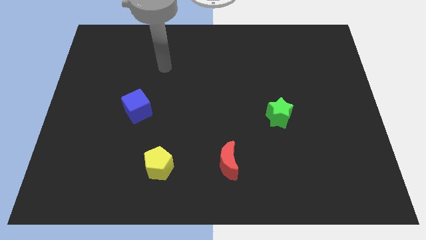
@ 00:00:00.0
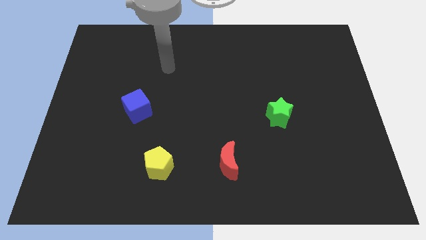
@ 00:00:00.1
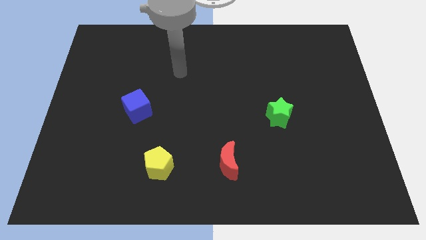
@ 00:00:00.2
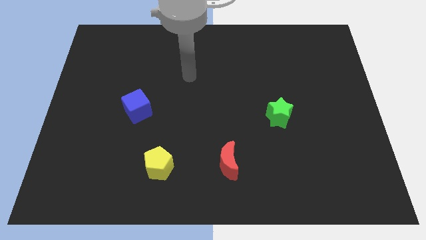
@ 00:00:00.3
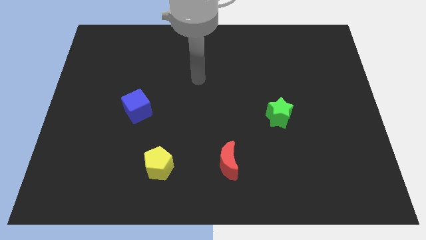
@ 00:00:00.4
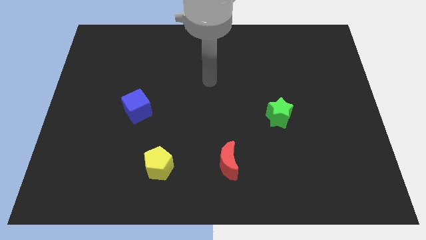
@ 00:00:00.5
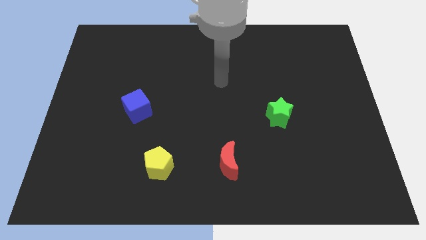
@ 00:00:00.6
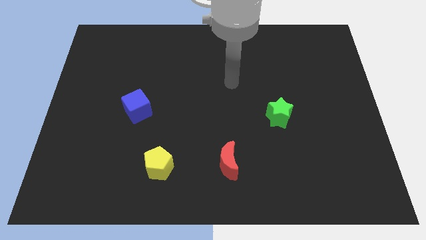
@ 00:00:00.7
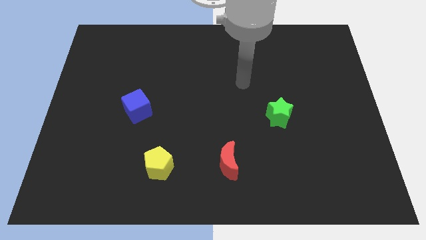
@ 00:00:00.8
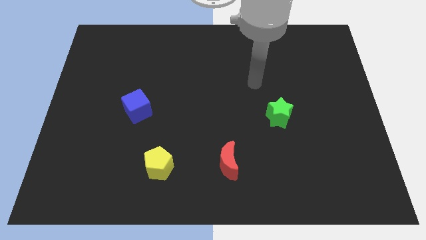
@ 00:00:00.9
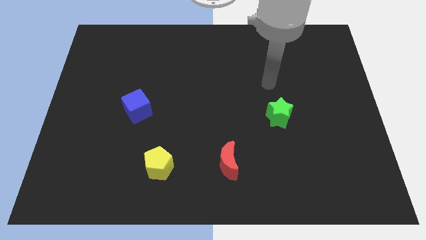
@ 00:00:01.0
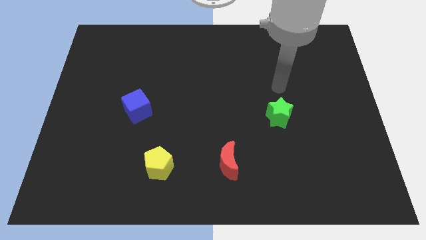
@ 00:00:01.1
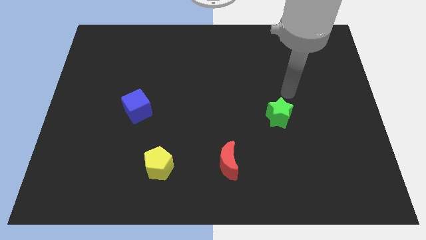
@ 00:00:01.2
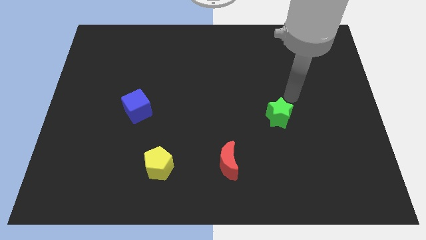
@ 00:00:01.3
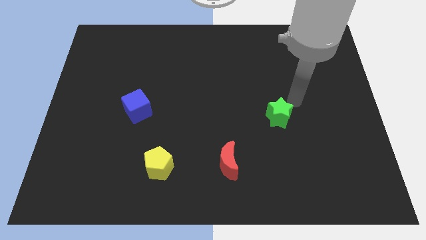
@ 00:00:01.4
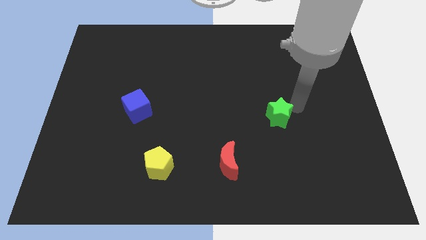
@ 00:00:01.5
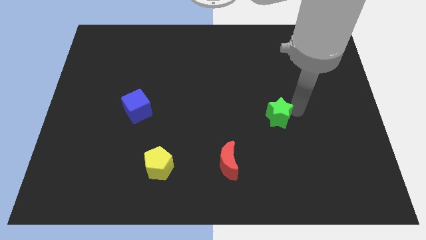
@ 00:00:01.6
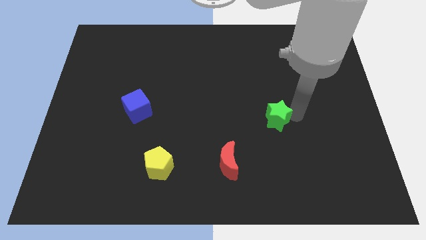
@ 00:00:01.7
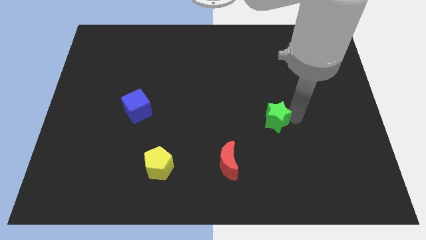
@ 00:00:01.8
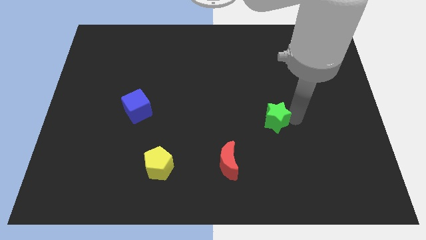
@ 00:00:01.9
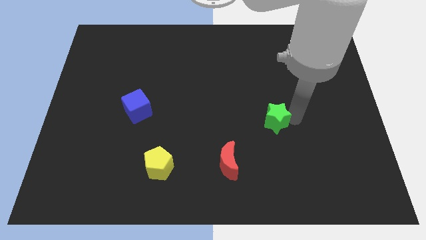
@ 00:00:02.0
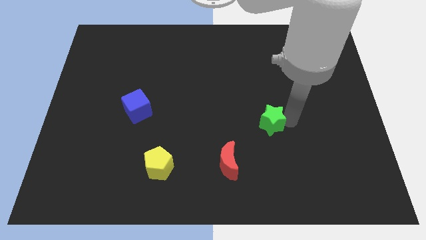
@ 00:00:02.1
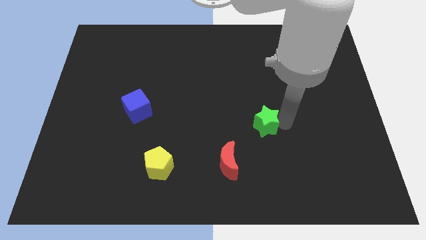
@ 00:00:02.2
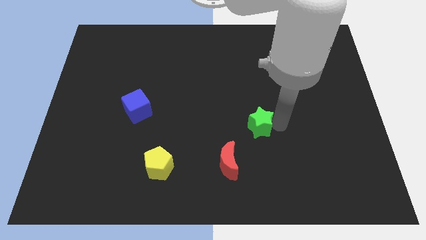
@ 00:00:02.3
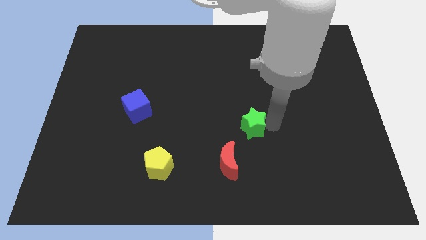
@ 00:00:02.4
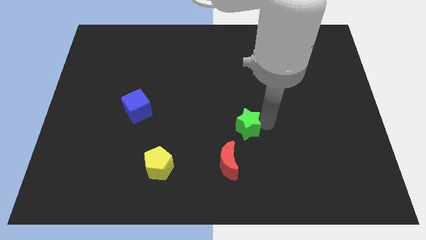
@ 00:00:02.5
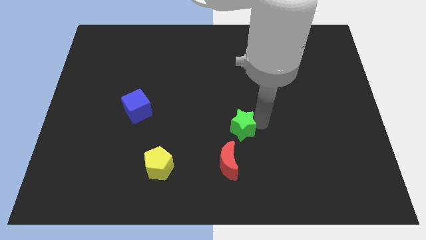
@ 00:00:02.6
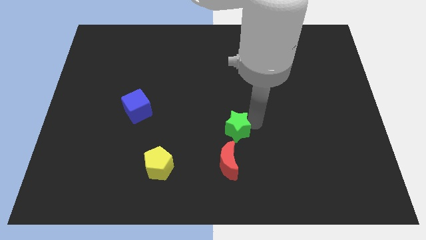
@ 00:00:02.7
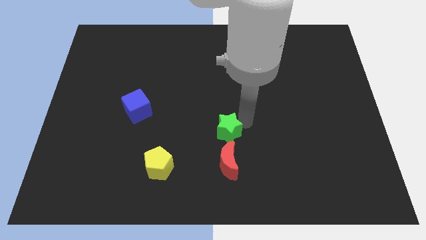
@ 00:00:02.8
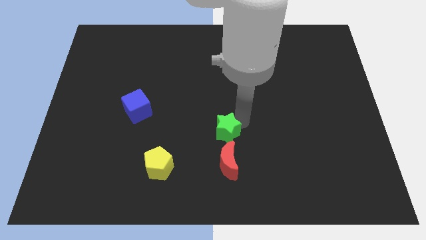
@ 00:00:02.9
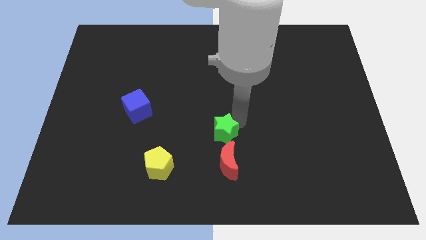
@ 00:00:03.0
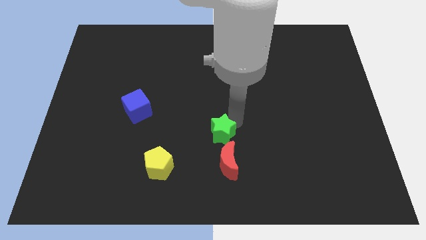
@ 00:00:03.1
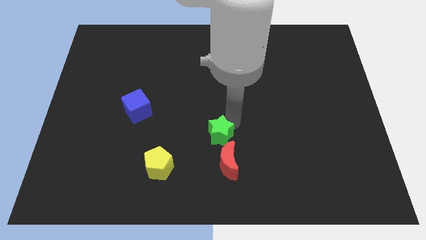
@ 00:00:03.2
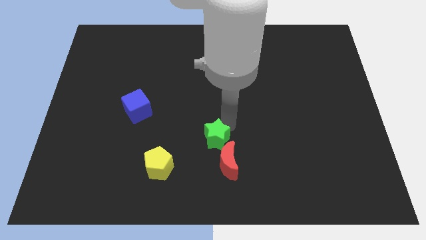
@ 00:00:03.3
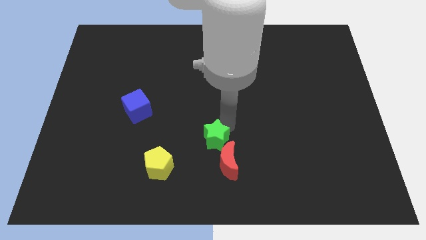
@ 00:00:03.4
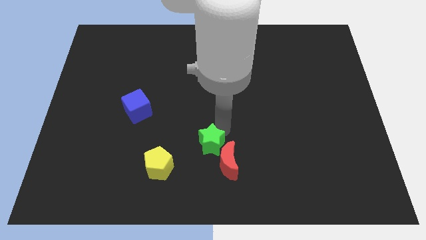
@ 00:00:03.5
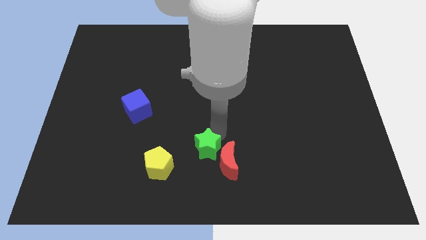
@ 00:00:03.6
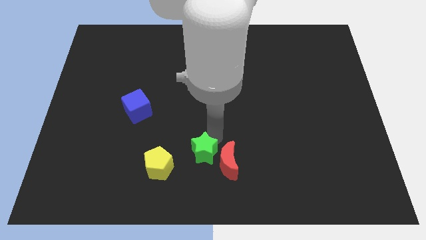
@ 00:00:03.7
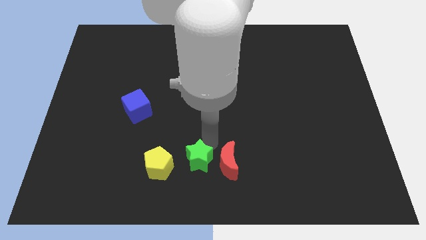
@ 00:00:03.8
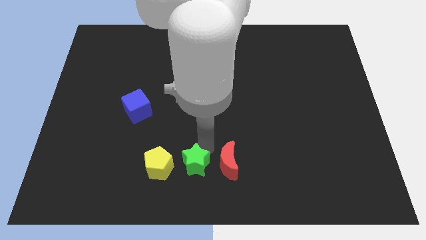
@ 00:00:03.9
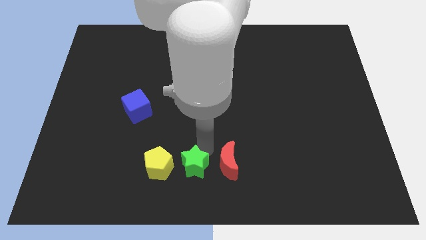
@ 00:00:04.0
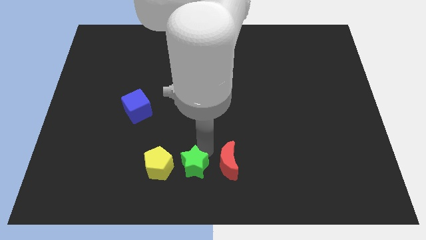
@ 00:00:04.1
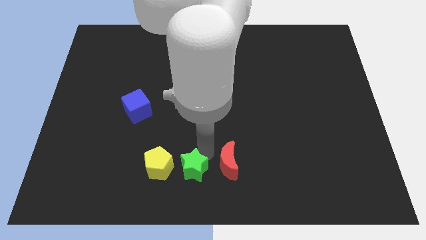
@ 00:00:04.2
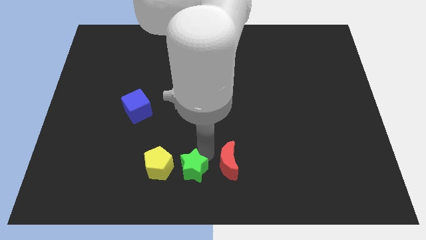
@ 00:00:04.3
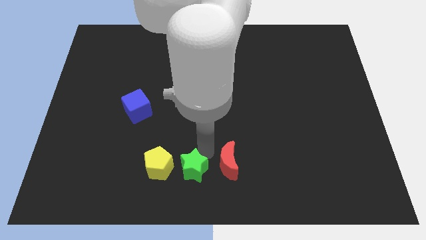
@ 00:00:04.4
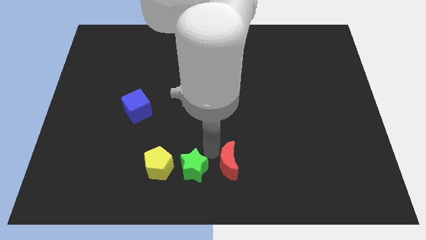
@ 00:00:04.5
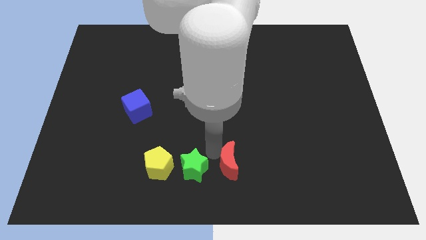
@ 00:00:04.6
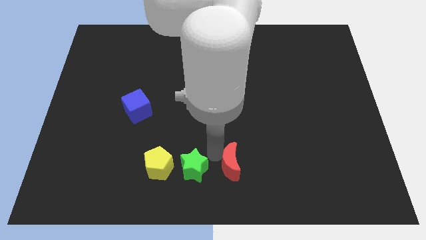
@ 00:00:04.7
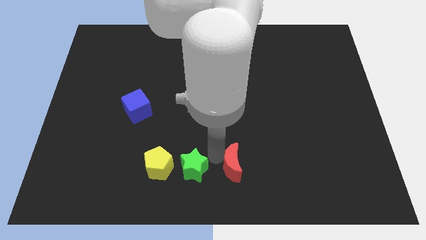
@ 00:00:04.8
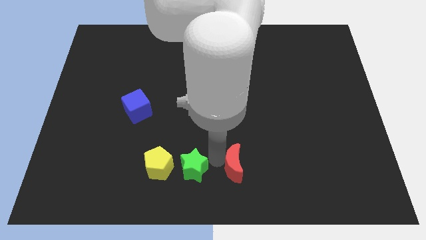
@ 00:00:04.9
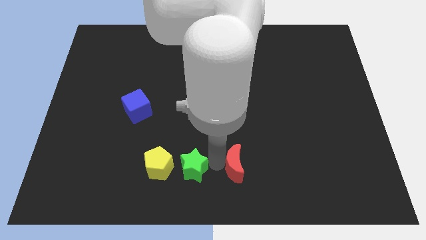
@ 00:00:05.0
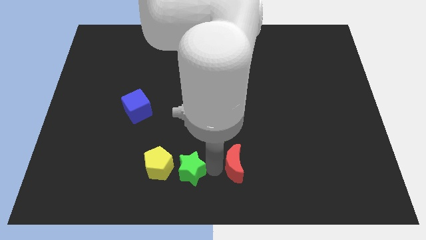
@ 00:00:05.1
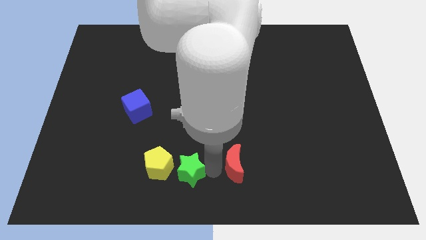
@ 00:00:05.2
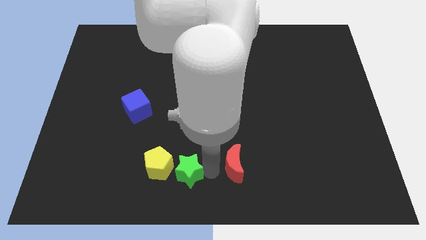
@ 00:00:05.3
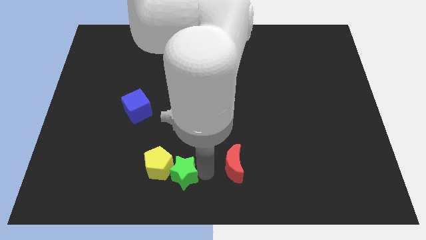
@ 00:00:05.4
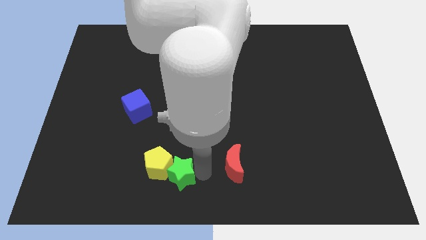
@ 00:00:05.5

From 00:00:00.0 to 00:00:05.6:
put the star close to the pentagon

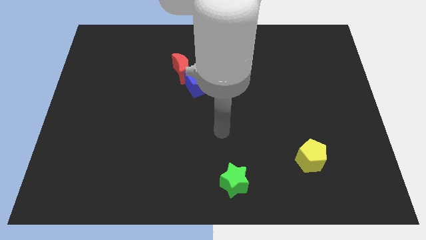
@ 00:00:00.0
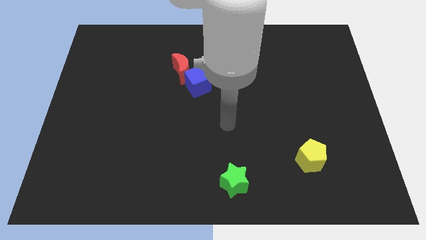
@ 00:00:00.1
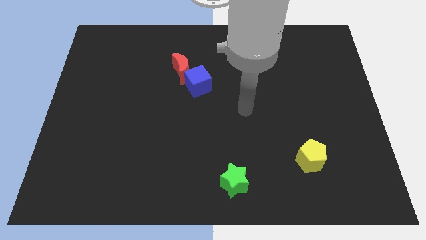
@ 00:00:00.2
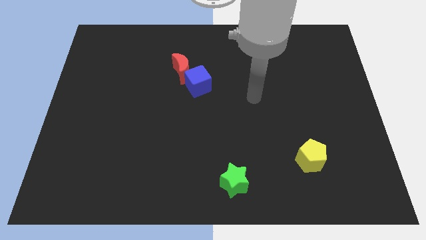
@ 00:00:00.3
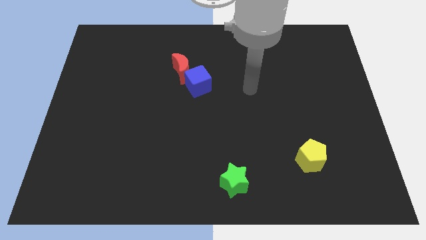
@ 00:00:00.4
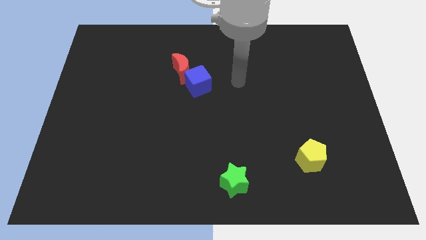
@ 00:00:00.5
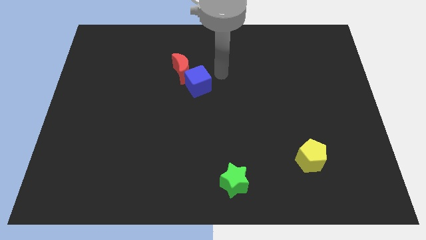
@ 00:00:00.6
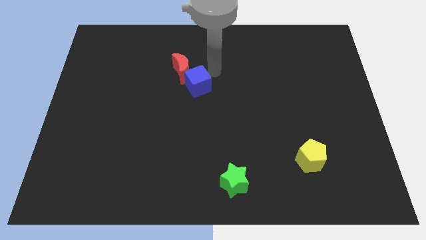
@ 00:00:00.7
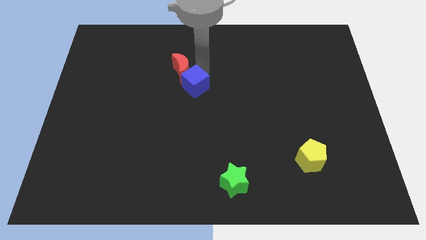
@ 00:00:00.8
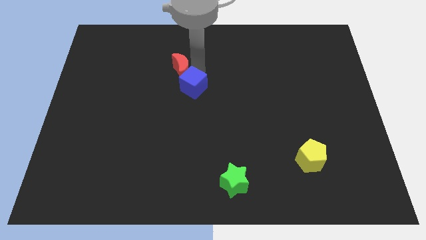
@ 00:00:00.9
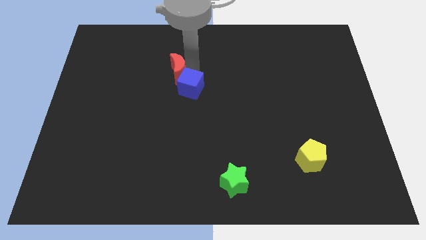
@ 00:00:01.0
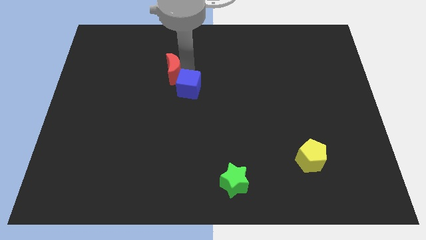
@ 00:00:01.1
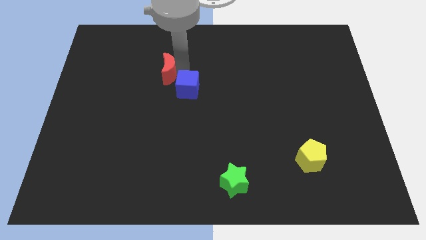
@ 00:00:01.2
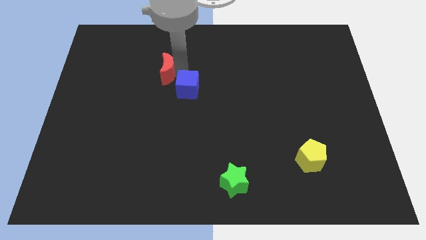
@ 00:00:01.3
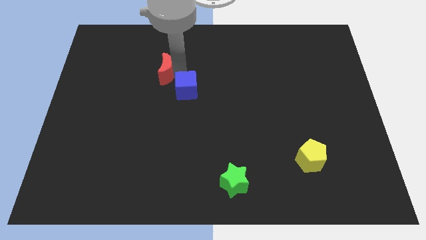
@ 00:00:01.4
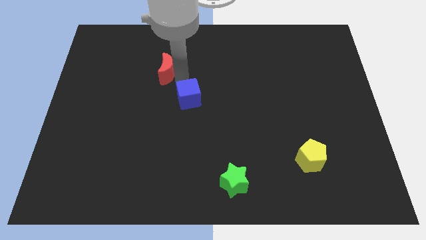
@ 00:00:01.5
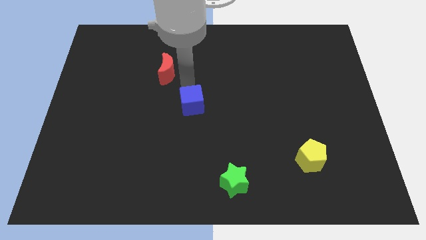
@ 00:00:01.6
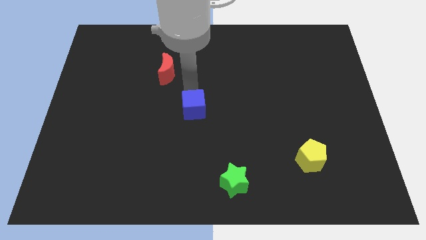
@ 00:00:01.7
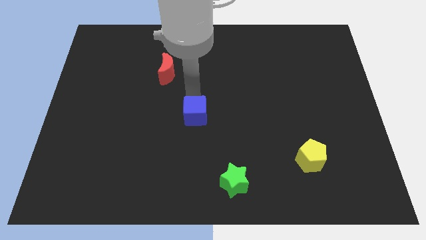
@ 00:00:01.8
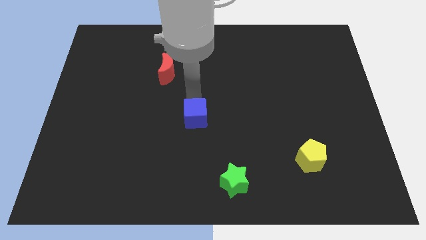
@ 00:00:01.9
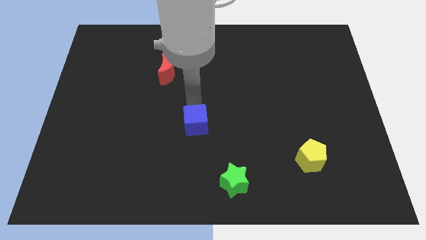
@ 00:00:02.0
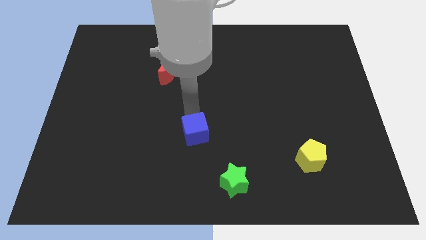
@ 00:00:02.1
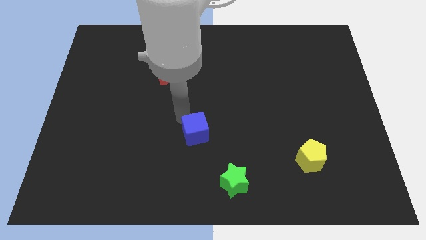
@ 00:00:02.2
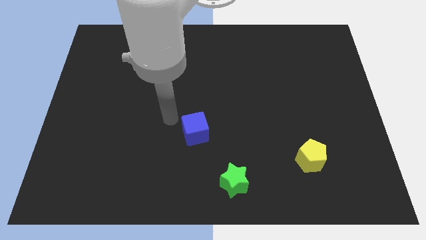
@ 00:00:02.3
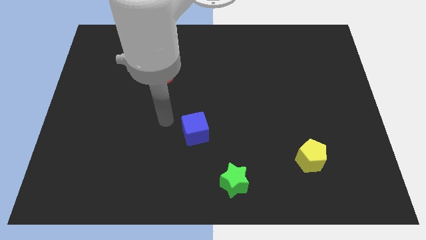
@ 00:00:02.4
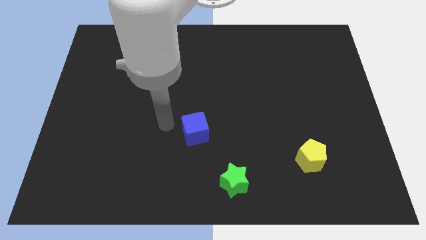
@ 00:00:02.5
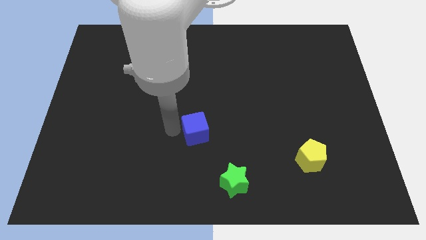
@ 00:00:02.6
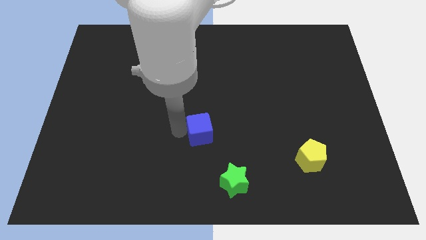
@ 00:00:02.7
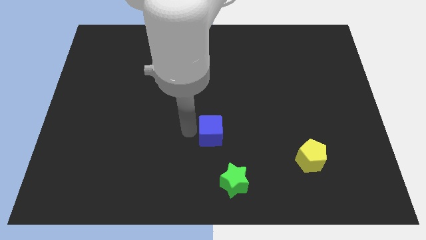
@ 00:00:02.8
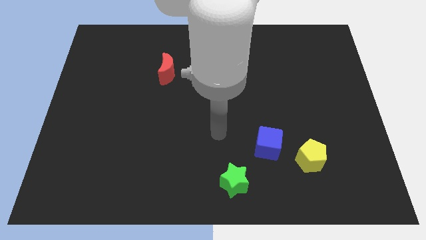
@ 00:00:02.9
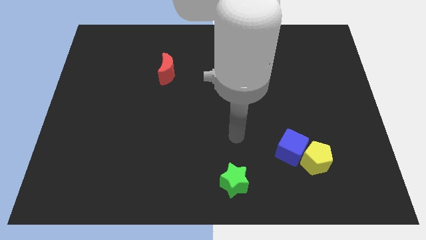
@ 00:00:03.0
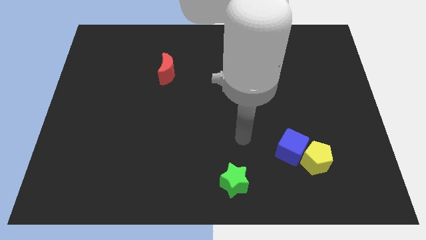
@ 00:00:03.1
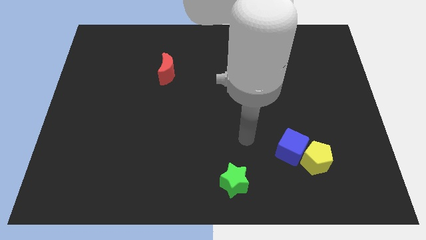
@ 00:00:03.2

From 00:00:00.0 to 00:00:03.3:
move the blue block to the yellow pentagon
